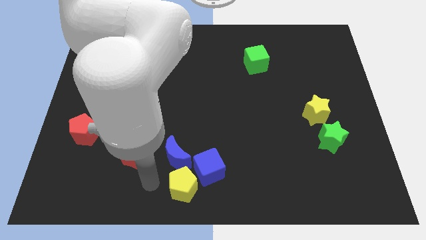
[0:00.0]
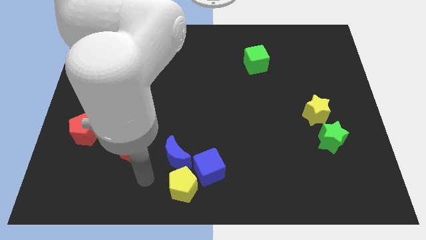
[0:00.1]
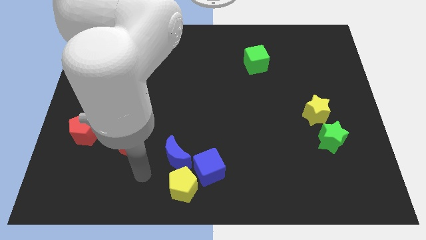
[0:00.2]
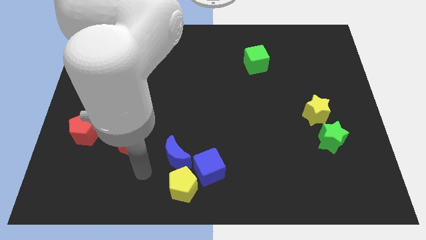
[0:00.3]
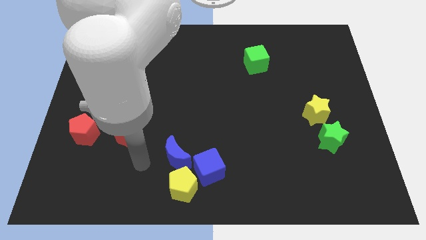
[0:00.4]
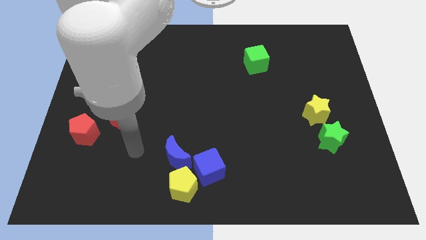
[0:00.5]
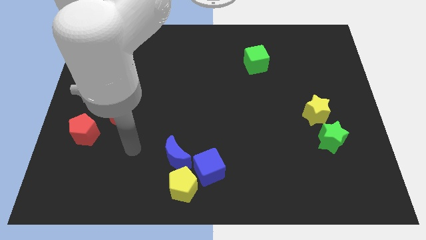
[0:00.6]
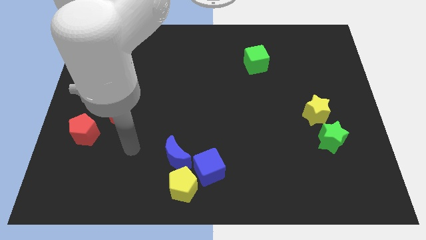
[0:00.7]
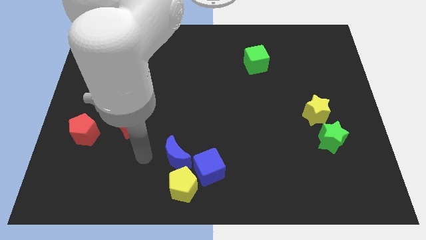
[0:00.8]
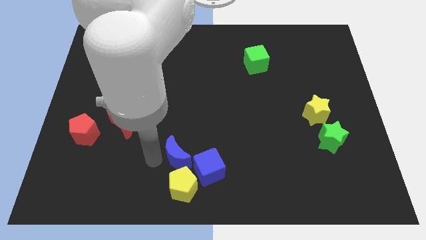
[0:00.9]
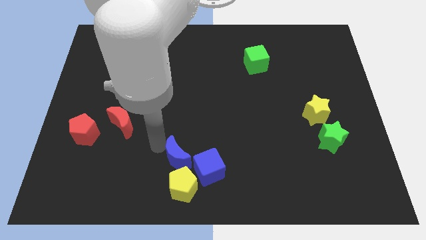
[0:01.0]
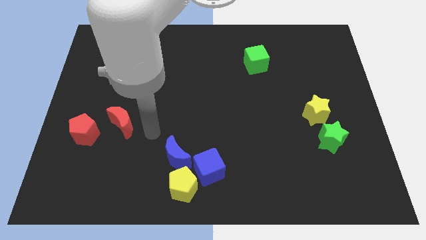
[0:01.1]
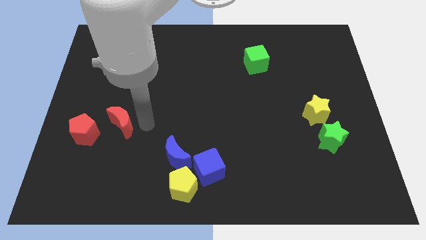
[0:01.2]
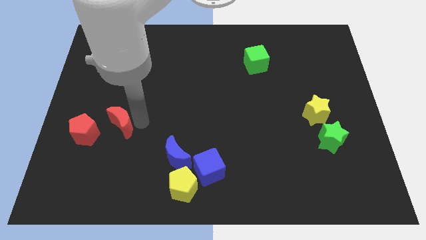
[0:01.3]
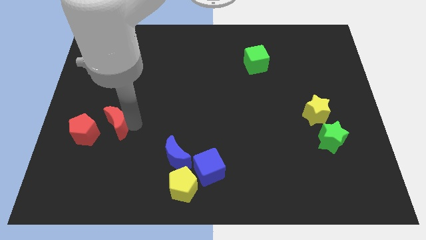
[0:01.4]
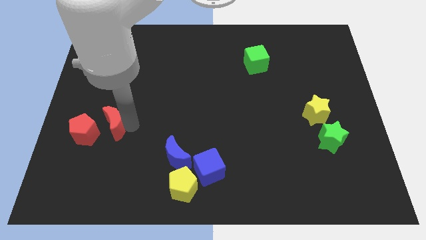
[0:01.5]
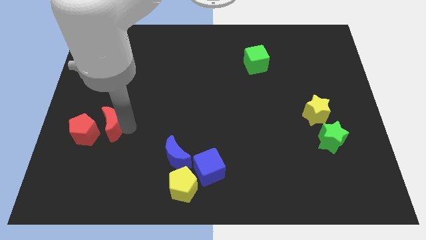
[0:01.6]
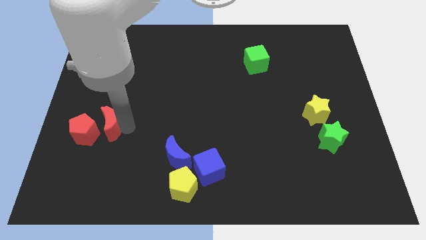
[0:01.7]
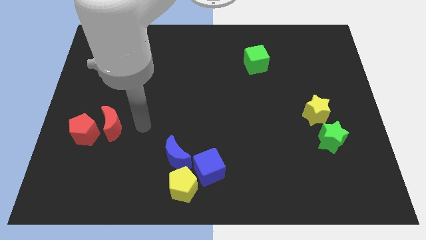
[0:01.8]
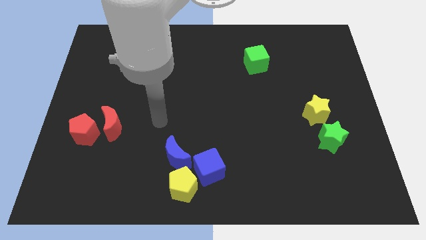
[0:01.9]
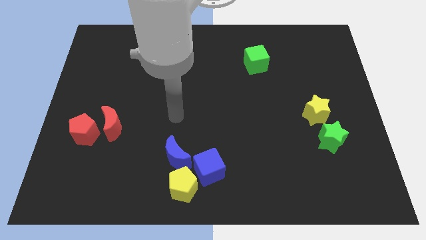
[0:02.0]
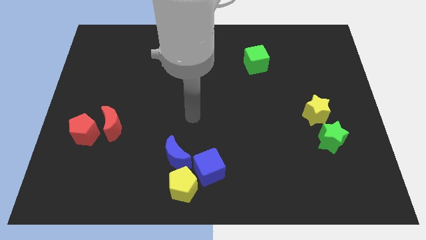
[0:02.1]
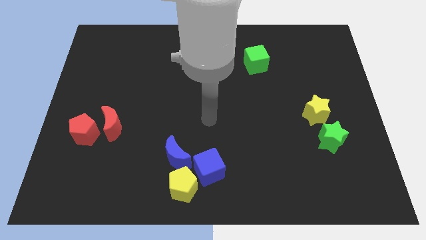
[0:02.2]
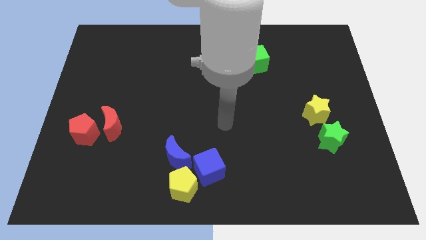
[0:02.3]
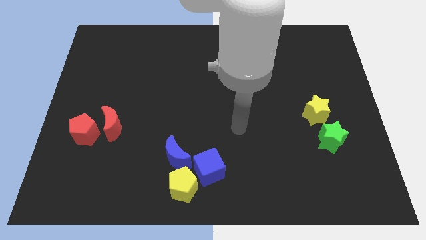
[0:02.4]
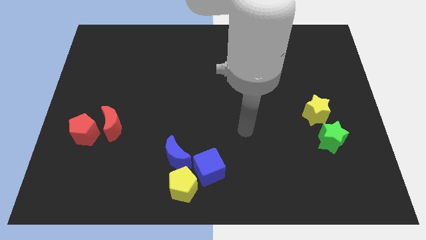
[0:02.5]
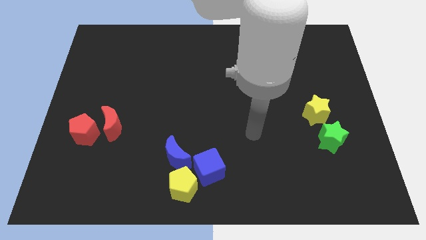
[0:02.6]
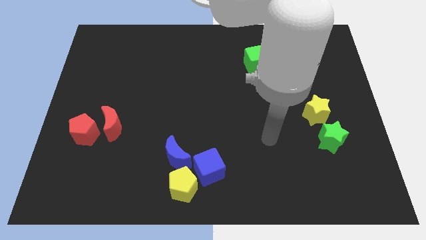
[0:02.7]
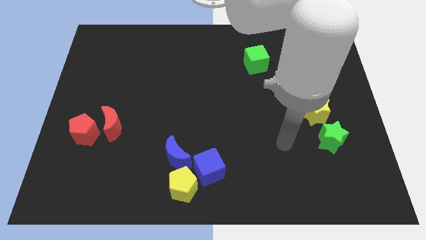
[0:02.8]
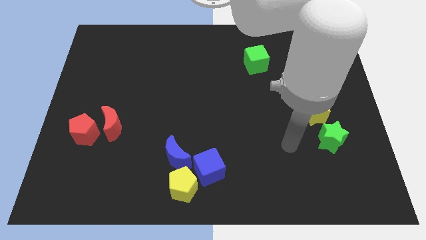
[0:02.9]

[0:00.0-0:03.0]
move the red crescent slightly left side

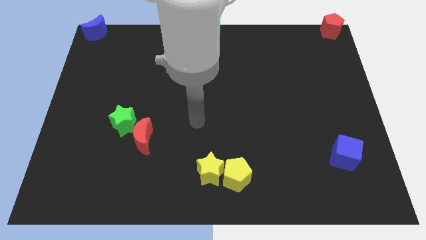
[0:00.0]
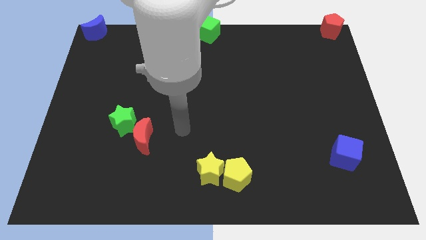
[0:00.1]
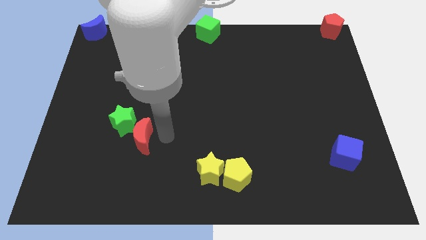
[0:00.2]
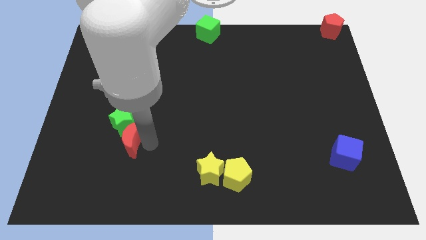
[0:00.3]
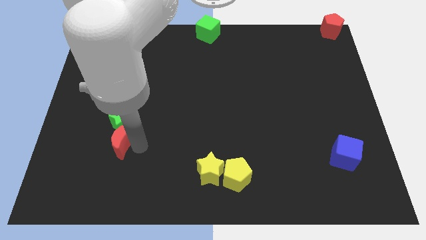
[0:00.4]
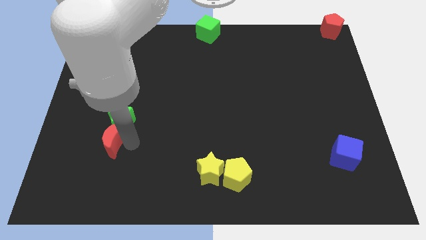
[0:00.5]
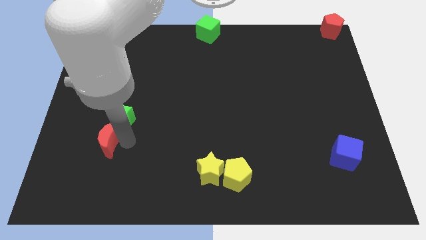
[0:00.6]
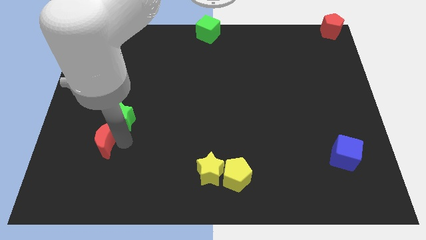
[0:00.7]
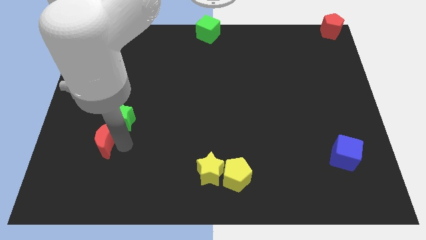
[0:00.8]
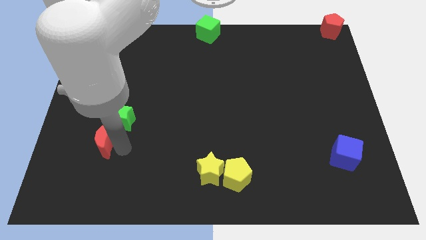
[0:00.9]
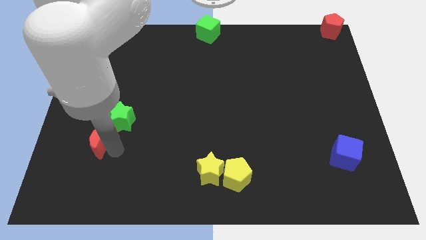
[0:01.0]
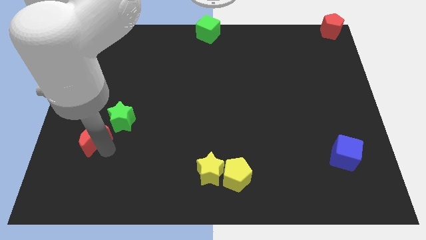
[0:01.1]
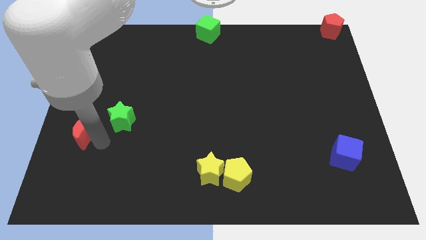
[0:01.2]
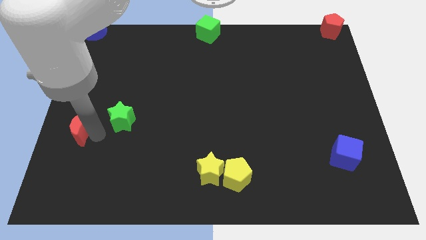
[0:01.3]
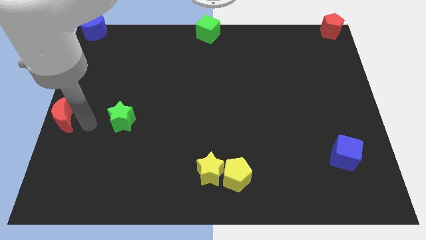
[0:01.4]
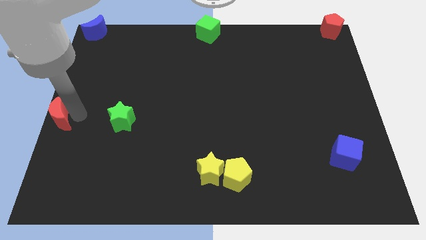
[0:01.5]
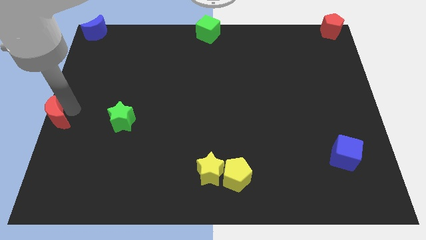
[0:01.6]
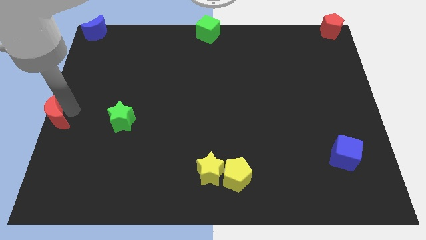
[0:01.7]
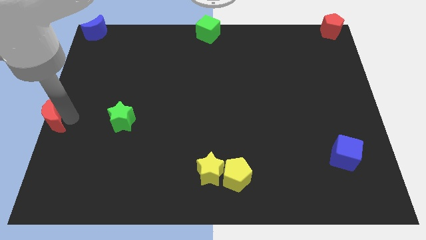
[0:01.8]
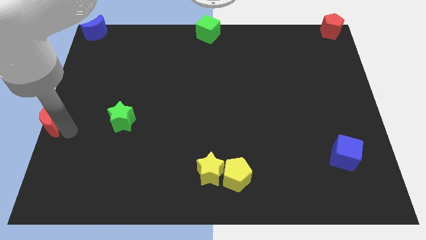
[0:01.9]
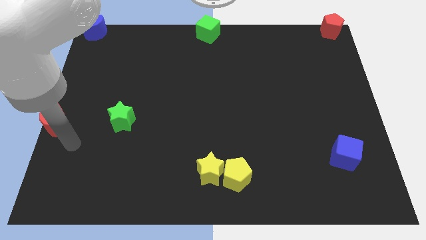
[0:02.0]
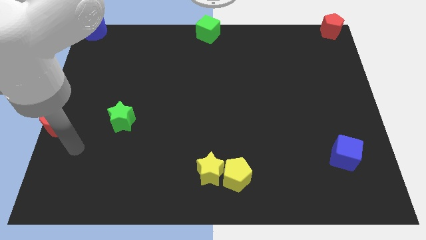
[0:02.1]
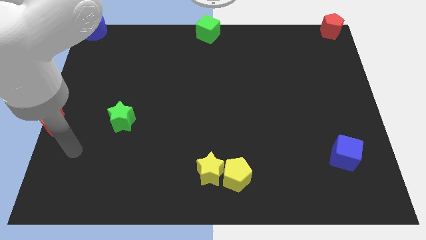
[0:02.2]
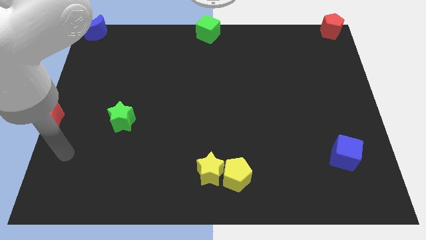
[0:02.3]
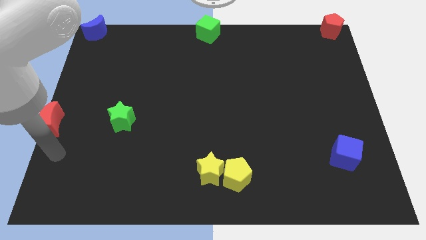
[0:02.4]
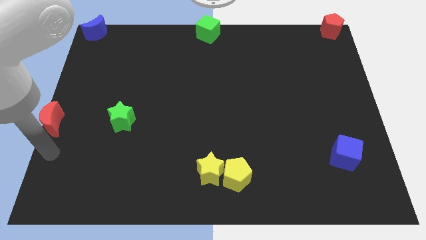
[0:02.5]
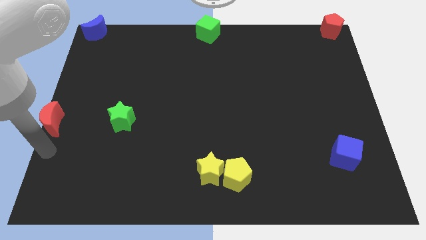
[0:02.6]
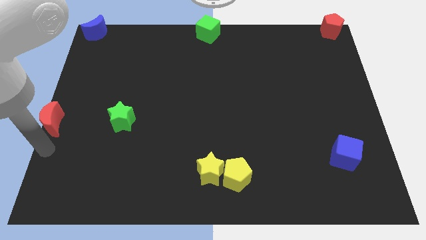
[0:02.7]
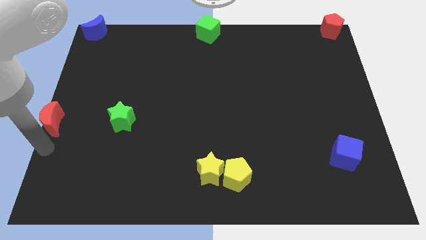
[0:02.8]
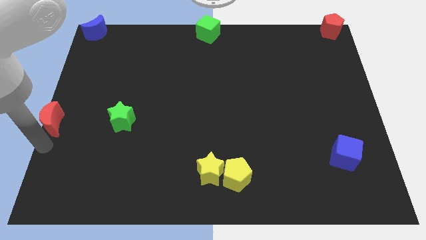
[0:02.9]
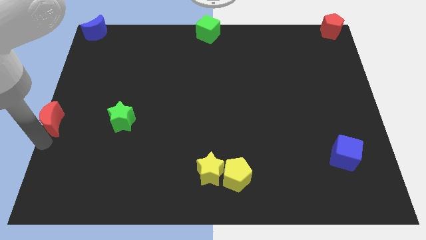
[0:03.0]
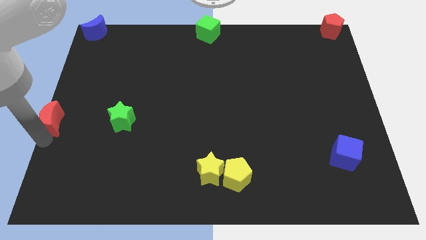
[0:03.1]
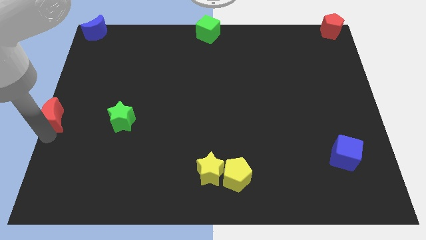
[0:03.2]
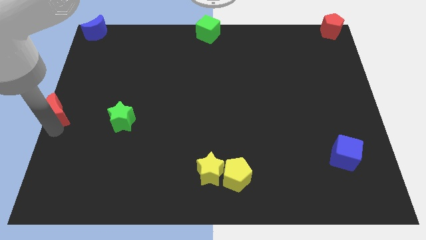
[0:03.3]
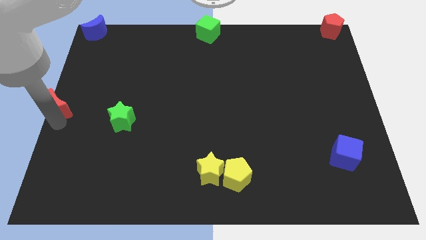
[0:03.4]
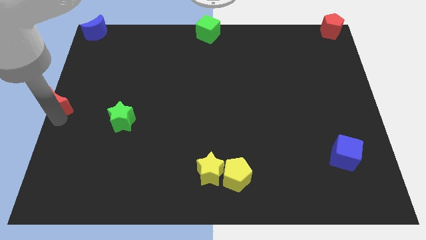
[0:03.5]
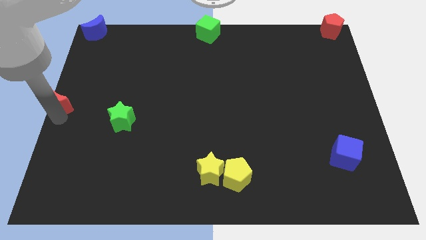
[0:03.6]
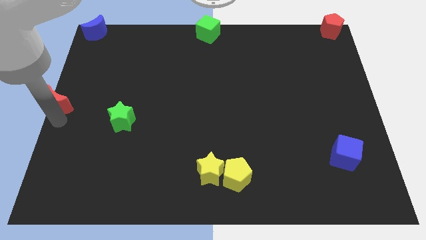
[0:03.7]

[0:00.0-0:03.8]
push the red moon towards the middle left of the board

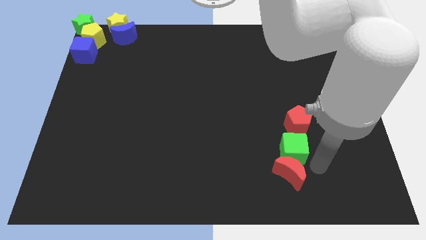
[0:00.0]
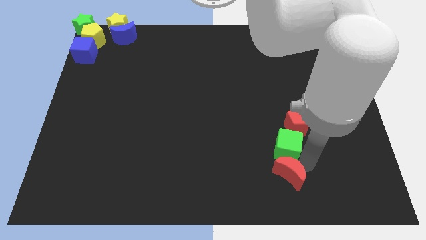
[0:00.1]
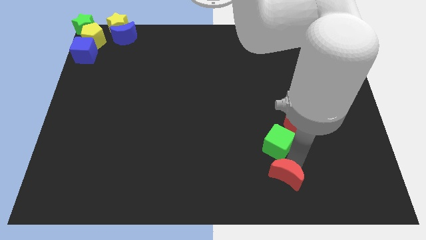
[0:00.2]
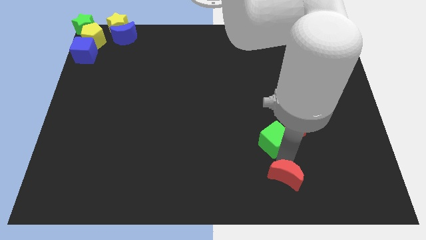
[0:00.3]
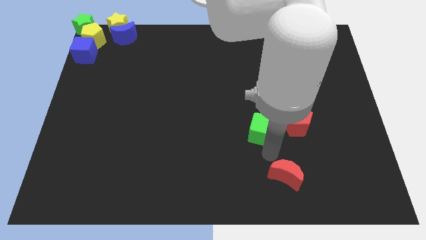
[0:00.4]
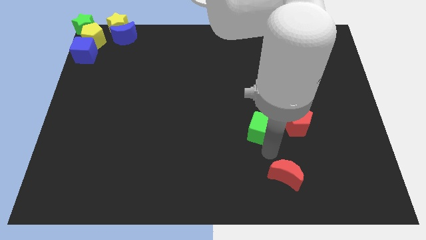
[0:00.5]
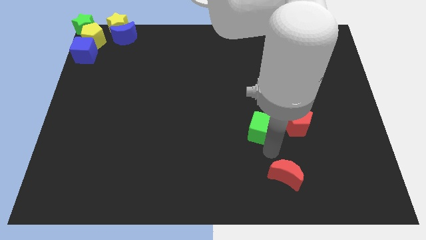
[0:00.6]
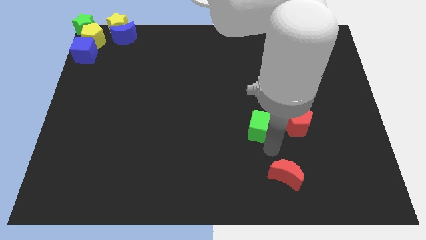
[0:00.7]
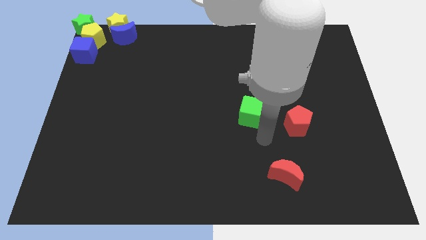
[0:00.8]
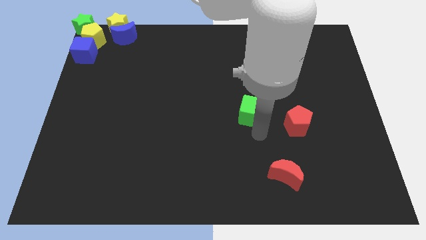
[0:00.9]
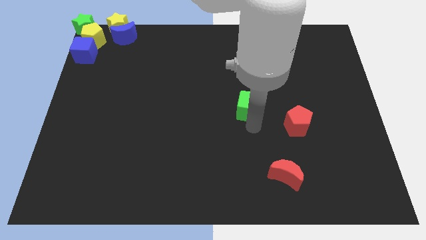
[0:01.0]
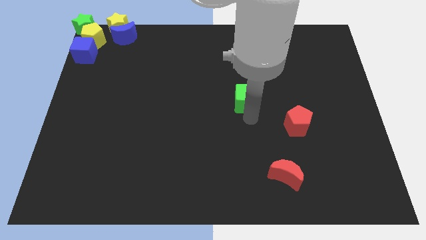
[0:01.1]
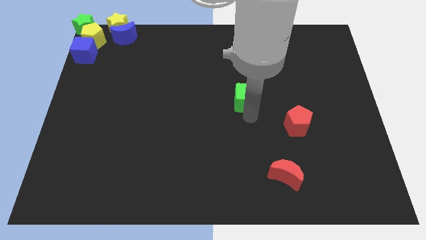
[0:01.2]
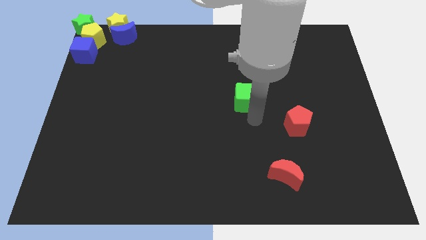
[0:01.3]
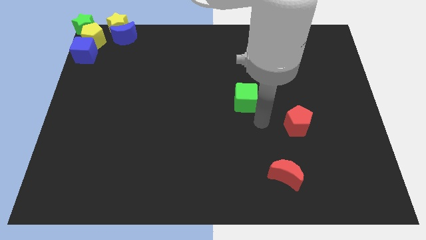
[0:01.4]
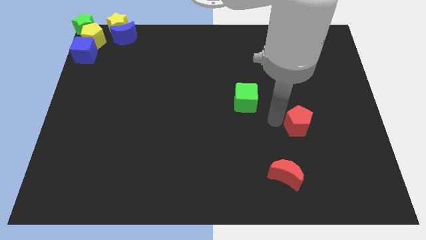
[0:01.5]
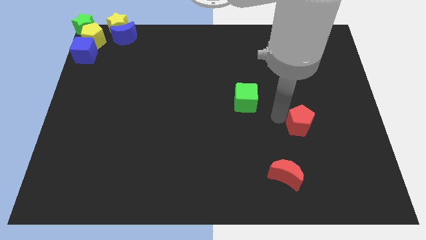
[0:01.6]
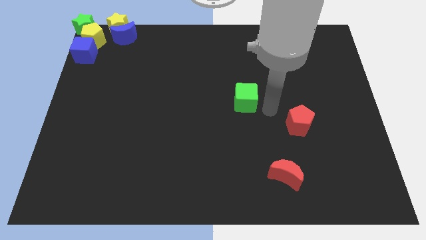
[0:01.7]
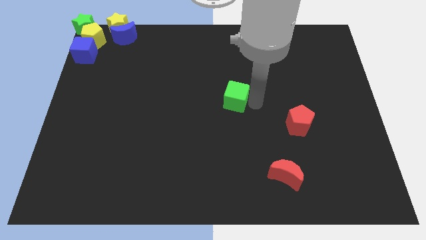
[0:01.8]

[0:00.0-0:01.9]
separate the green cube from the red blocks

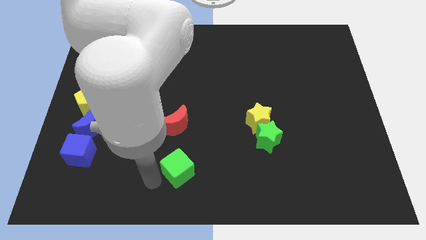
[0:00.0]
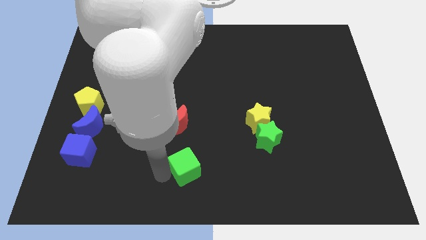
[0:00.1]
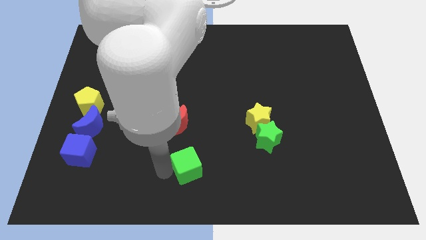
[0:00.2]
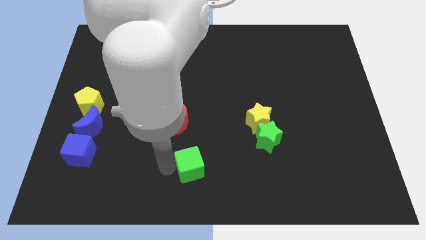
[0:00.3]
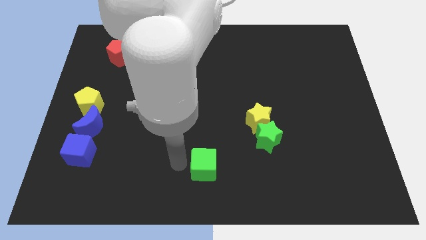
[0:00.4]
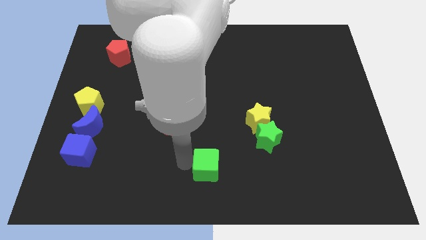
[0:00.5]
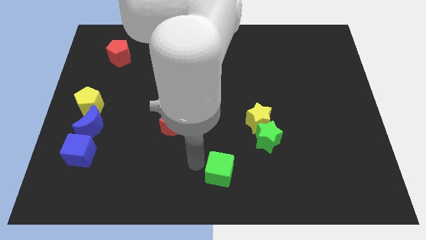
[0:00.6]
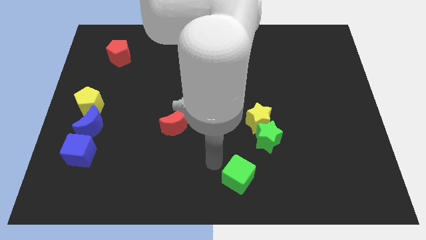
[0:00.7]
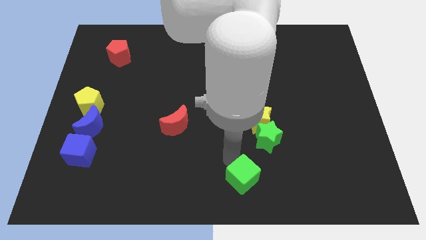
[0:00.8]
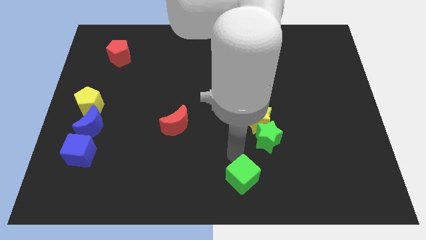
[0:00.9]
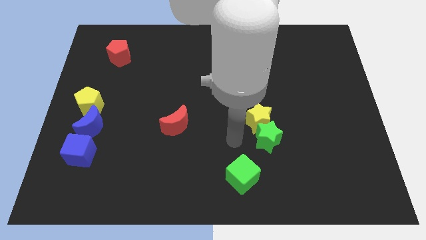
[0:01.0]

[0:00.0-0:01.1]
slide green cube diagonally bottom right to the red moon
